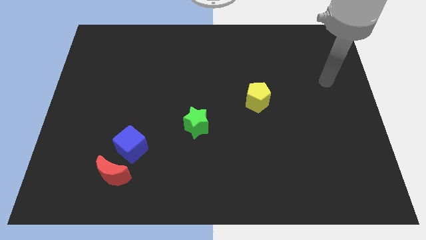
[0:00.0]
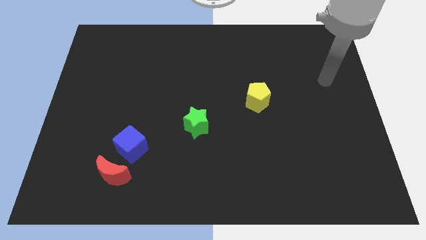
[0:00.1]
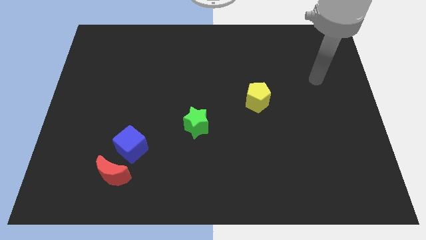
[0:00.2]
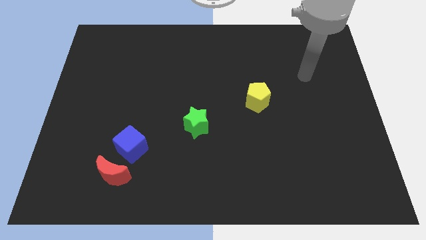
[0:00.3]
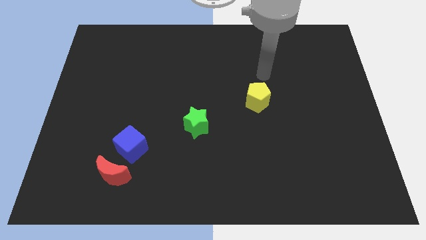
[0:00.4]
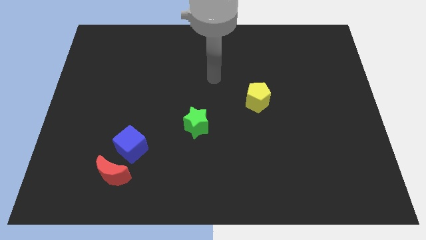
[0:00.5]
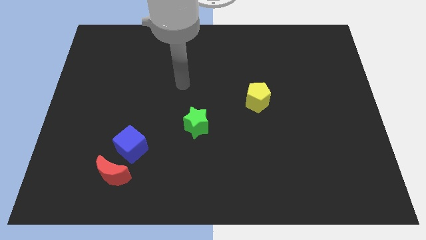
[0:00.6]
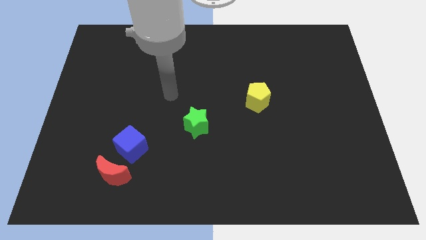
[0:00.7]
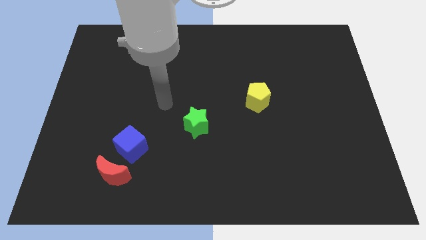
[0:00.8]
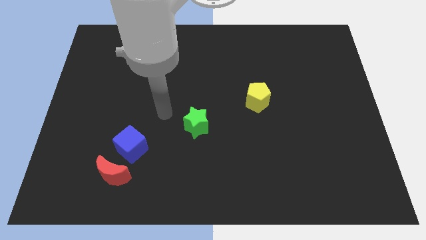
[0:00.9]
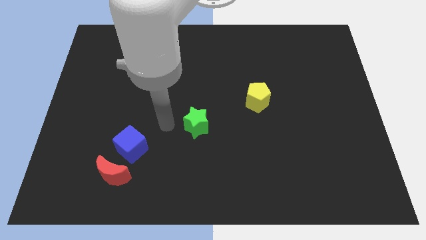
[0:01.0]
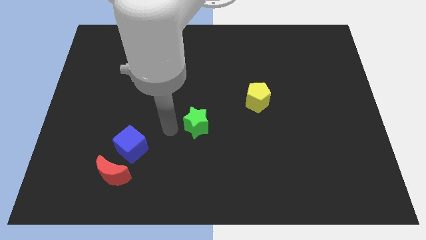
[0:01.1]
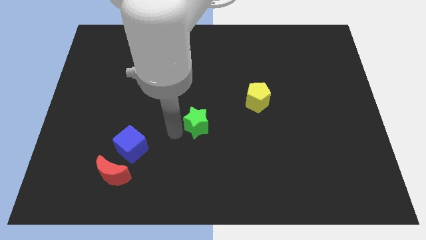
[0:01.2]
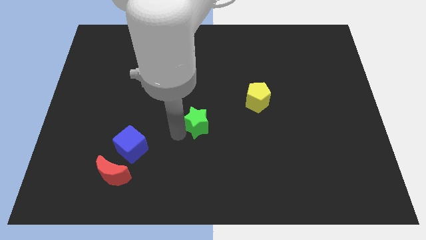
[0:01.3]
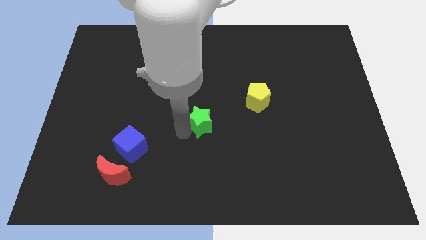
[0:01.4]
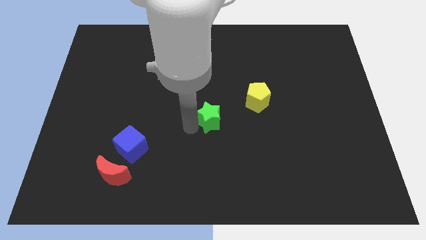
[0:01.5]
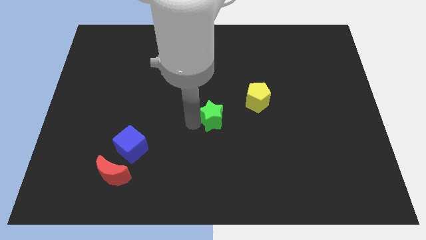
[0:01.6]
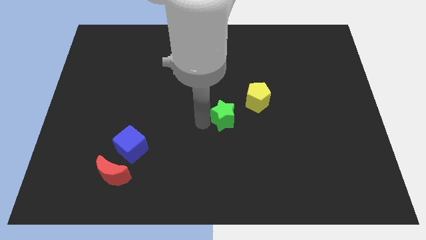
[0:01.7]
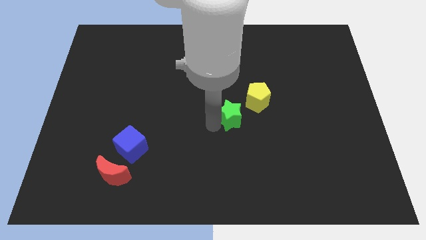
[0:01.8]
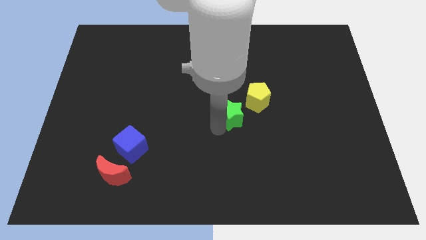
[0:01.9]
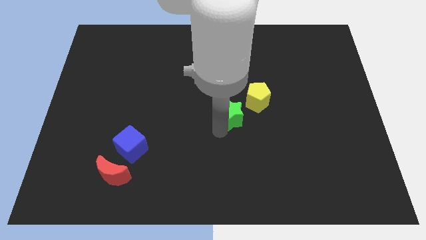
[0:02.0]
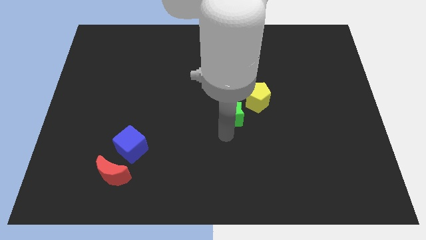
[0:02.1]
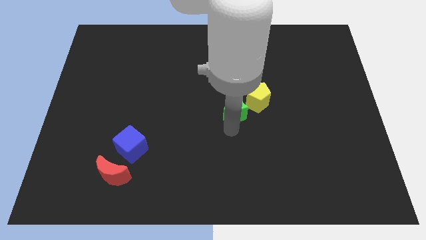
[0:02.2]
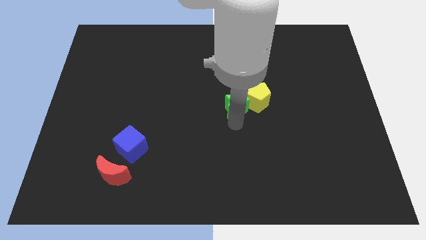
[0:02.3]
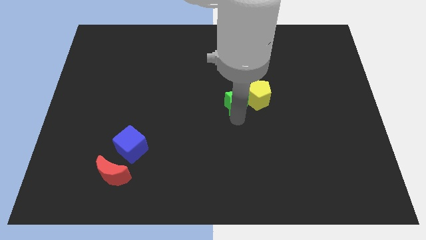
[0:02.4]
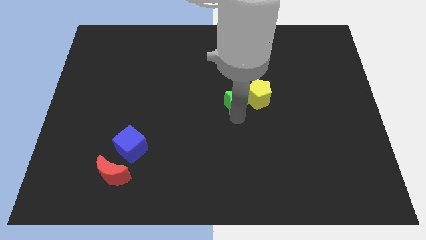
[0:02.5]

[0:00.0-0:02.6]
slide the green star close to the pentagon

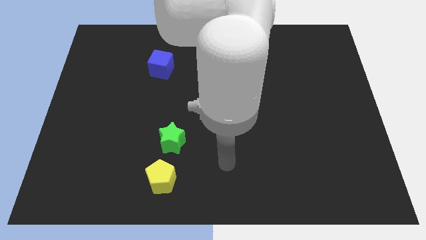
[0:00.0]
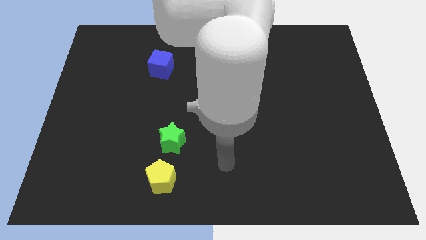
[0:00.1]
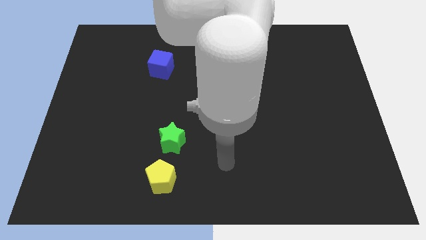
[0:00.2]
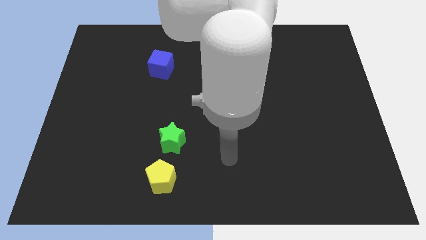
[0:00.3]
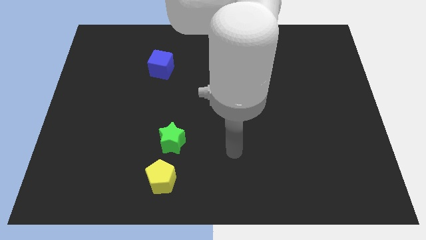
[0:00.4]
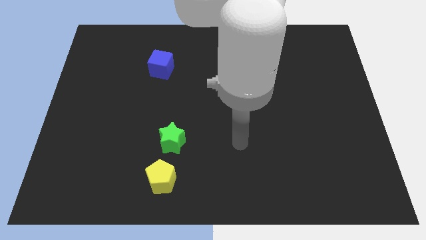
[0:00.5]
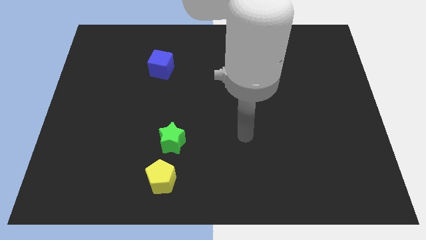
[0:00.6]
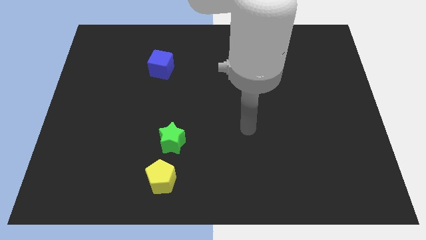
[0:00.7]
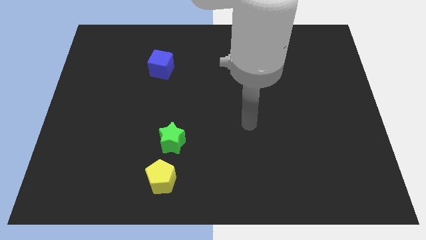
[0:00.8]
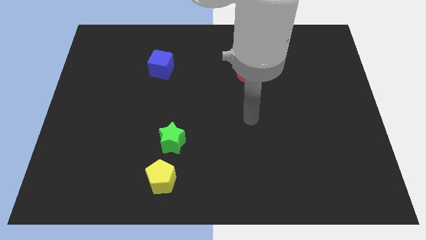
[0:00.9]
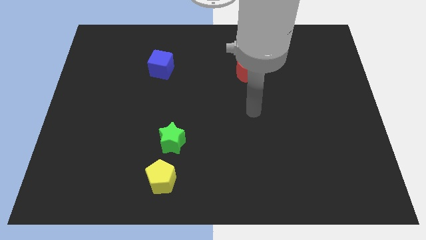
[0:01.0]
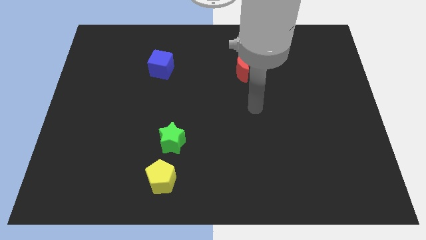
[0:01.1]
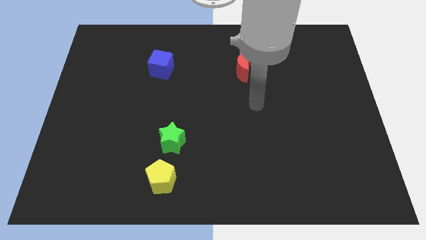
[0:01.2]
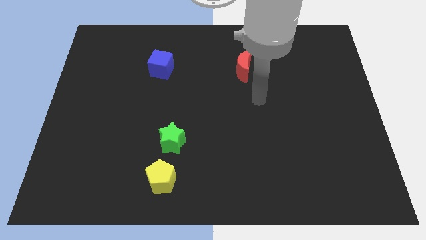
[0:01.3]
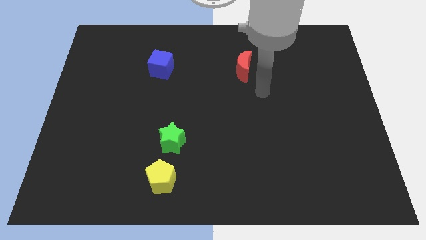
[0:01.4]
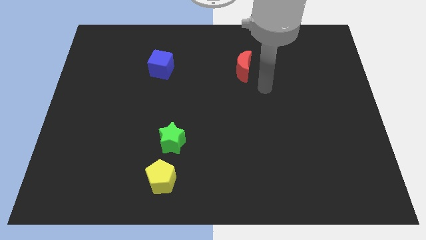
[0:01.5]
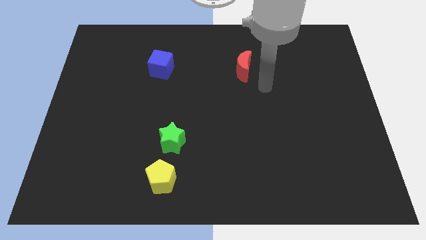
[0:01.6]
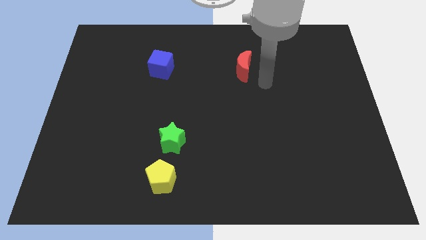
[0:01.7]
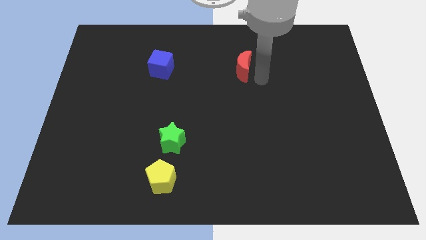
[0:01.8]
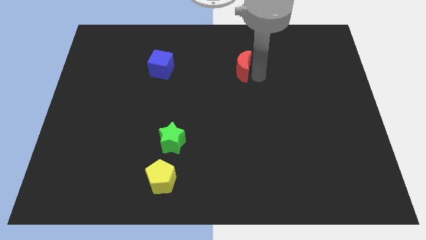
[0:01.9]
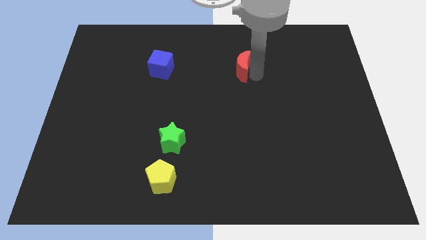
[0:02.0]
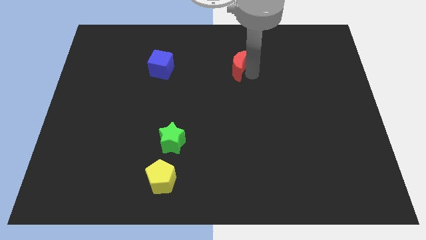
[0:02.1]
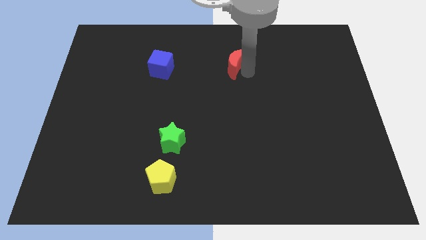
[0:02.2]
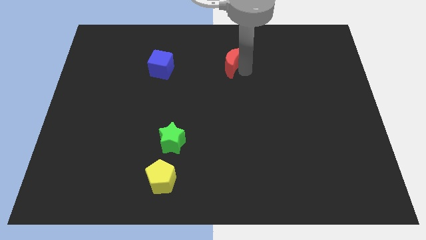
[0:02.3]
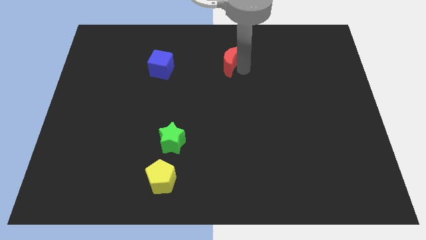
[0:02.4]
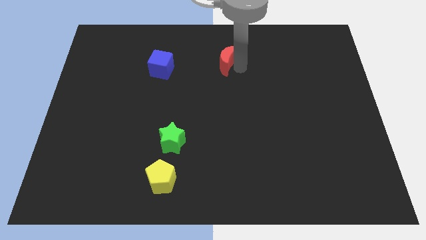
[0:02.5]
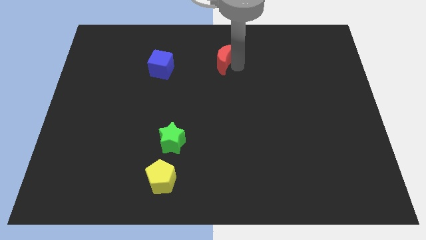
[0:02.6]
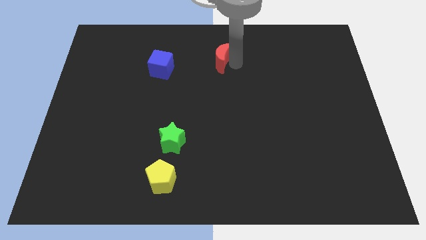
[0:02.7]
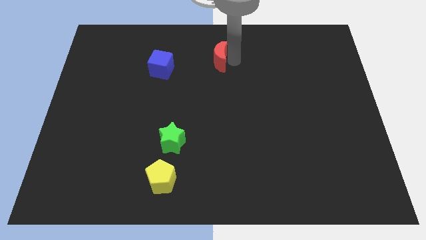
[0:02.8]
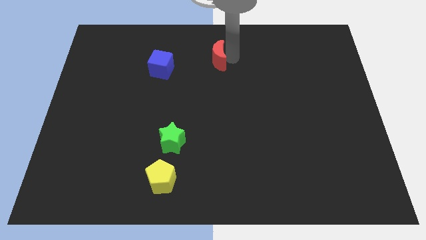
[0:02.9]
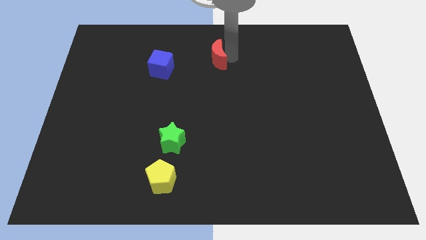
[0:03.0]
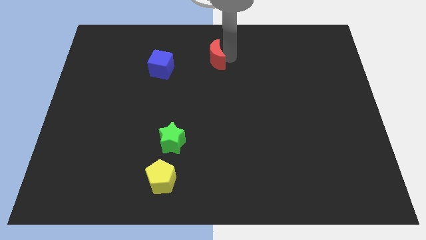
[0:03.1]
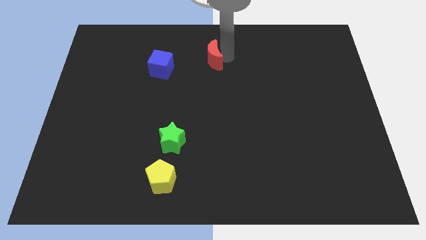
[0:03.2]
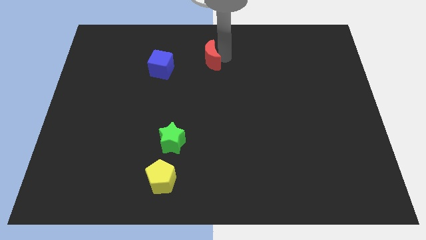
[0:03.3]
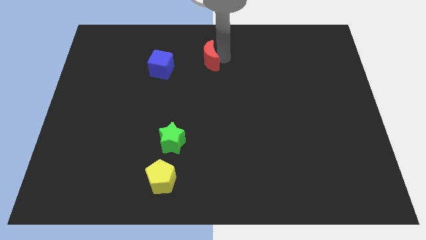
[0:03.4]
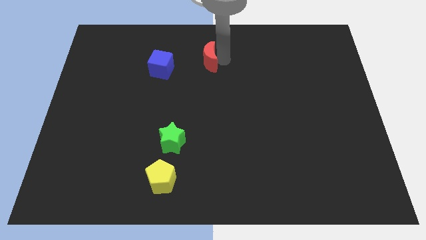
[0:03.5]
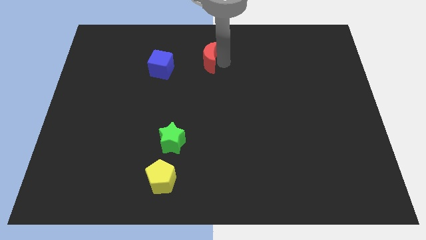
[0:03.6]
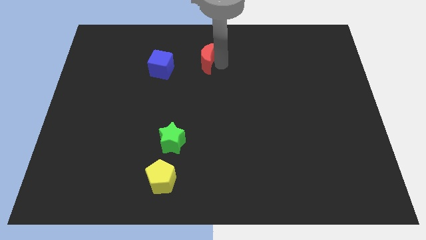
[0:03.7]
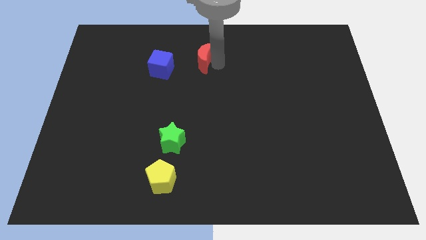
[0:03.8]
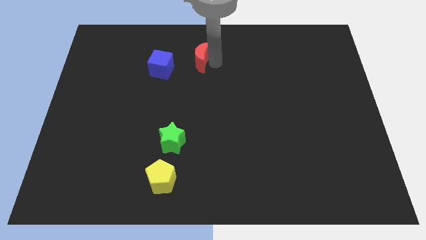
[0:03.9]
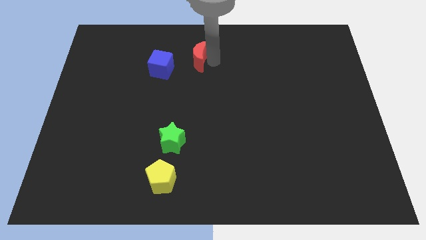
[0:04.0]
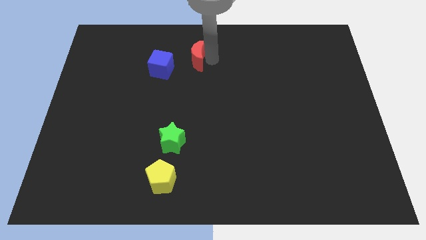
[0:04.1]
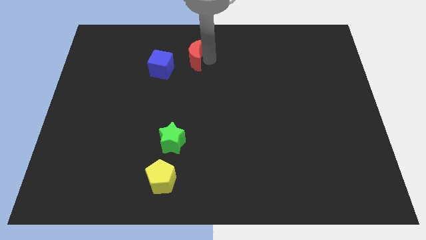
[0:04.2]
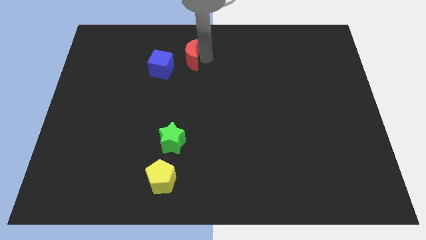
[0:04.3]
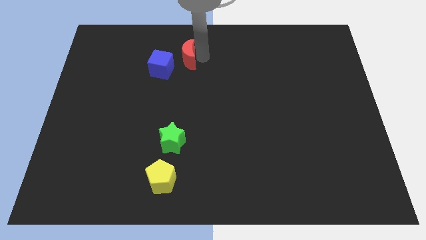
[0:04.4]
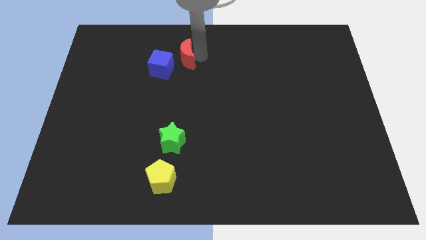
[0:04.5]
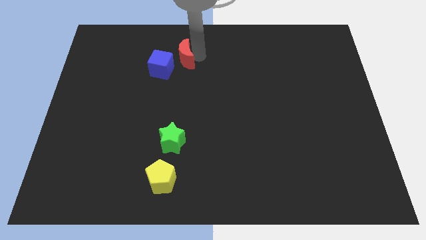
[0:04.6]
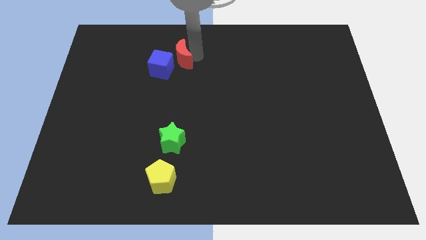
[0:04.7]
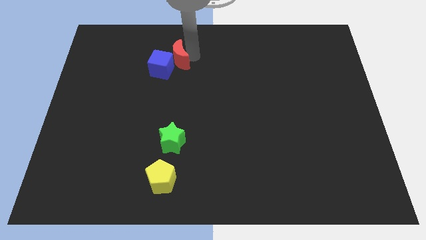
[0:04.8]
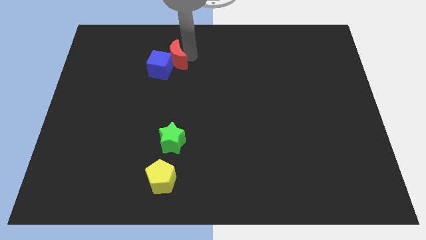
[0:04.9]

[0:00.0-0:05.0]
move the moon close to the blue cube

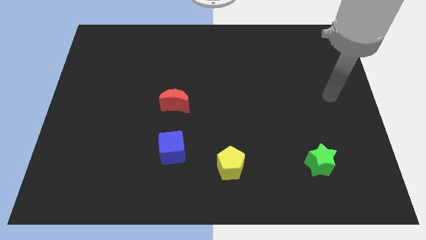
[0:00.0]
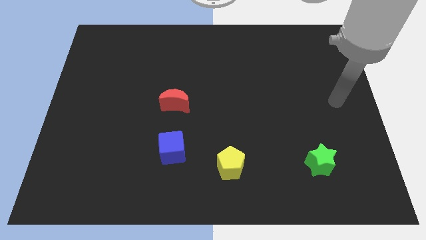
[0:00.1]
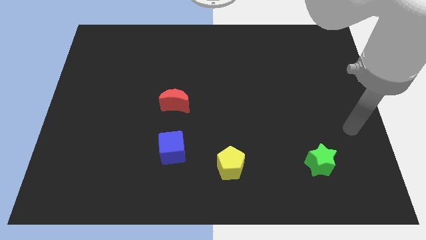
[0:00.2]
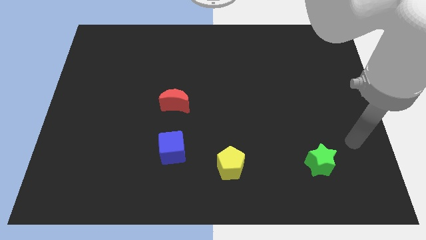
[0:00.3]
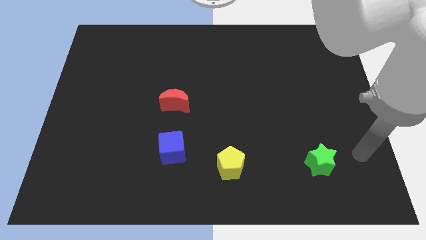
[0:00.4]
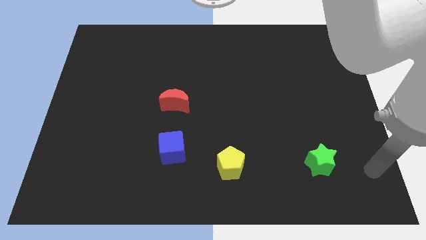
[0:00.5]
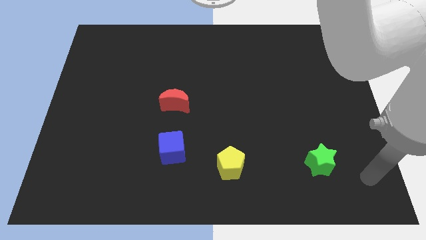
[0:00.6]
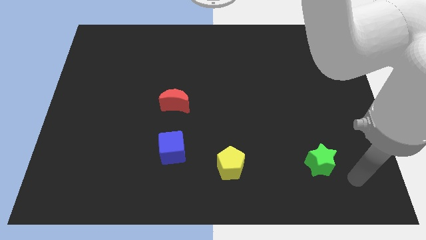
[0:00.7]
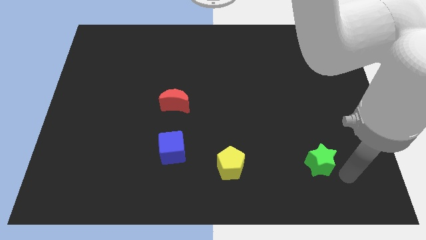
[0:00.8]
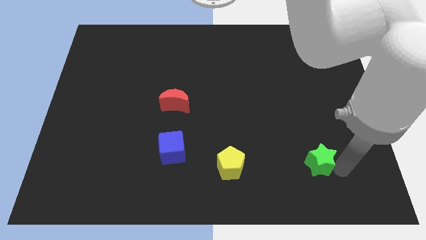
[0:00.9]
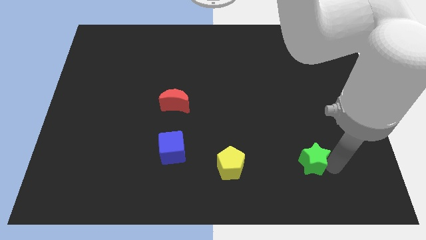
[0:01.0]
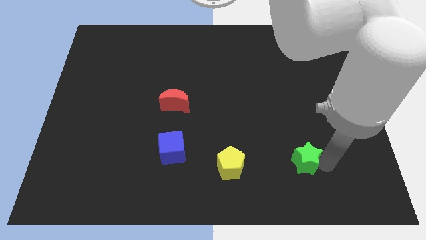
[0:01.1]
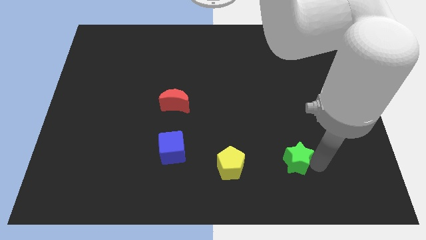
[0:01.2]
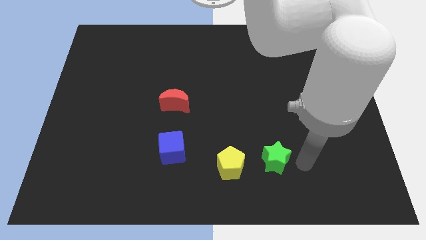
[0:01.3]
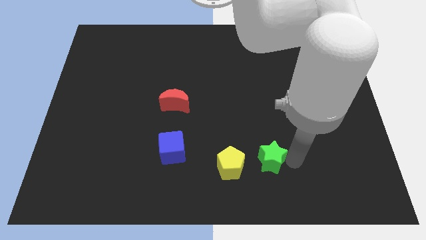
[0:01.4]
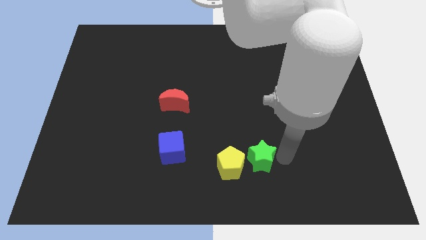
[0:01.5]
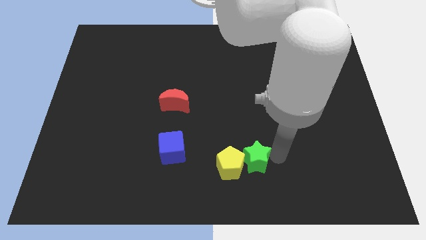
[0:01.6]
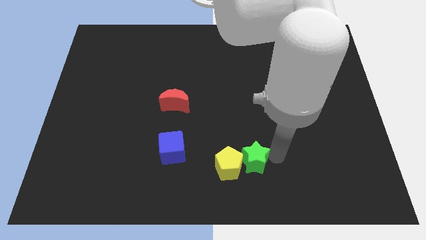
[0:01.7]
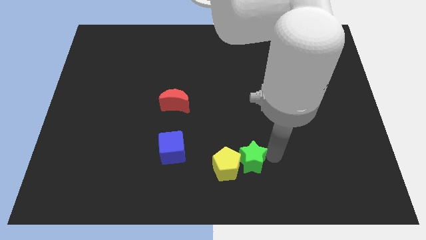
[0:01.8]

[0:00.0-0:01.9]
slide the star to the pentagon
